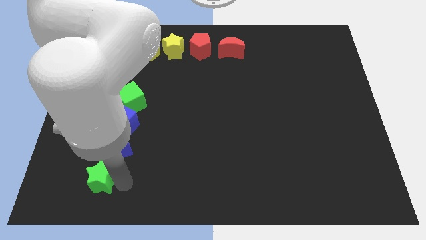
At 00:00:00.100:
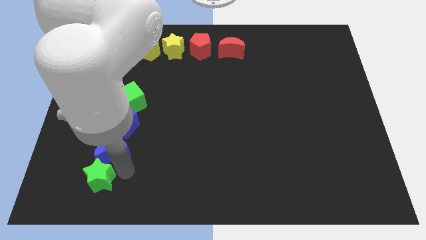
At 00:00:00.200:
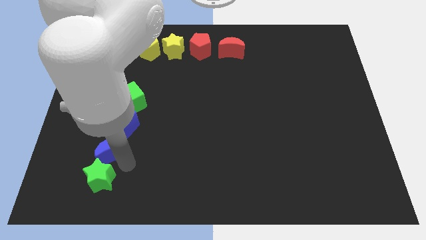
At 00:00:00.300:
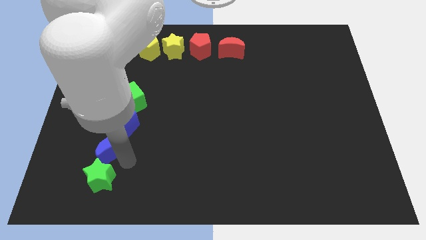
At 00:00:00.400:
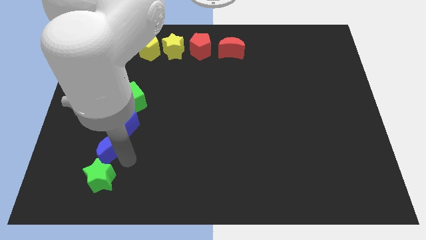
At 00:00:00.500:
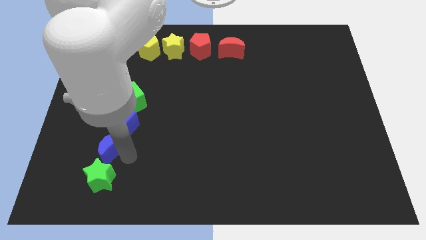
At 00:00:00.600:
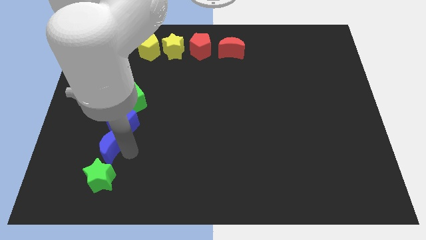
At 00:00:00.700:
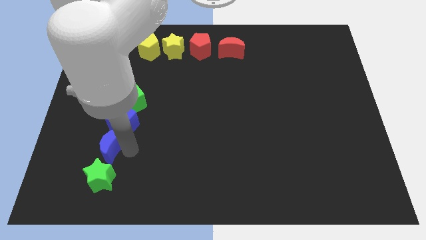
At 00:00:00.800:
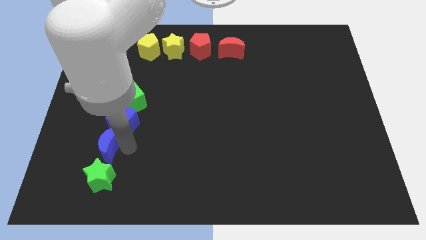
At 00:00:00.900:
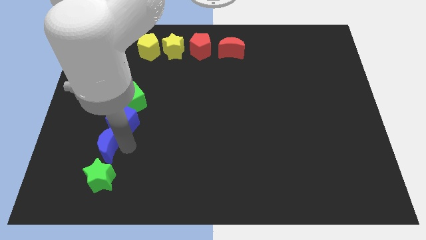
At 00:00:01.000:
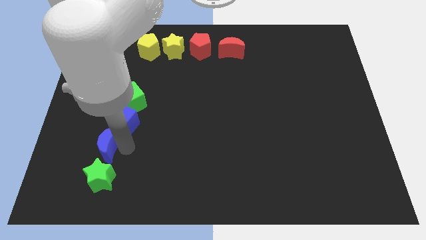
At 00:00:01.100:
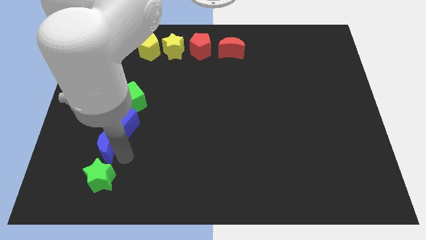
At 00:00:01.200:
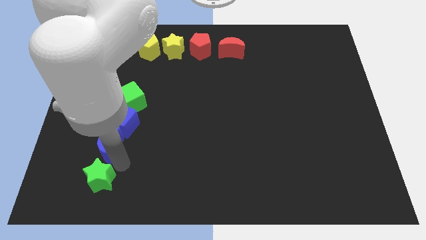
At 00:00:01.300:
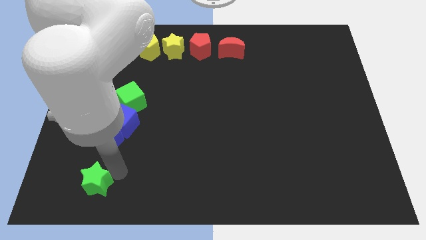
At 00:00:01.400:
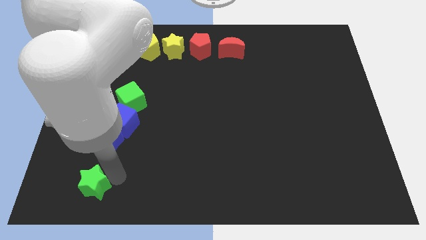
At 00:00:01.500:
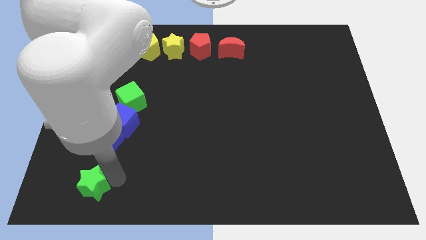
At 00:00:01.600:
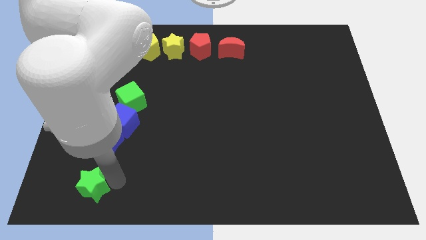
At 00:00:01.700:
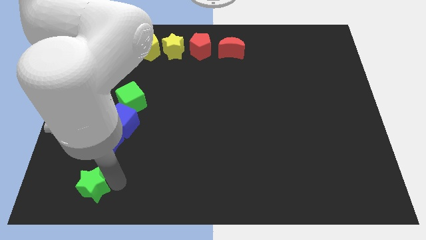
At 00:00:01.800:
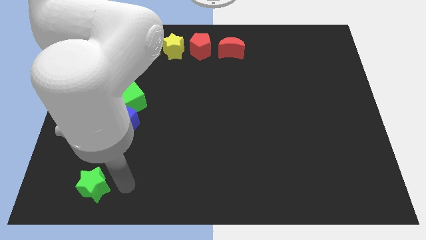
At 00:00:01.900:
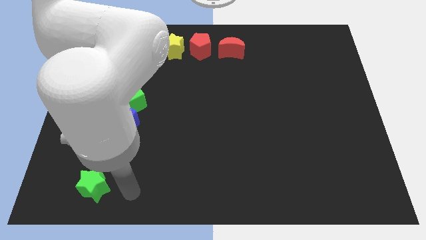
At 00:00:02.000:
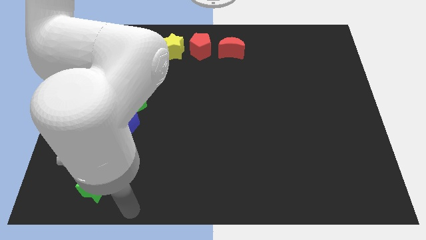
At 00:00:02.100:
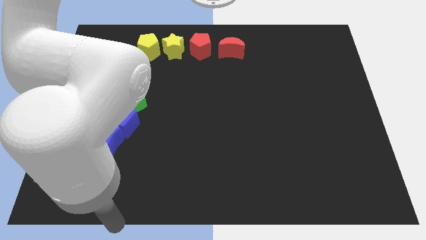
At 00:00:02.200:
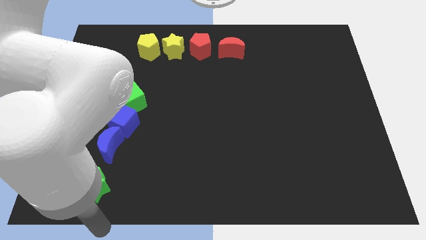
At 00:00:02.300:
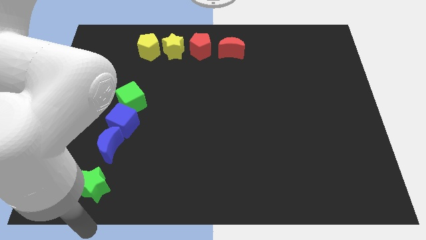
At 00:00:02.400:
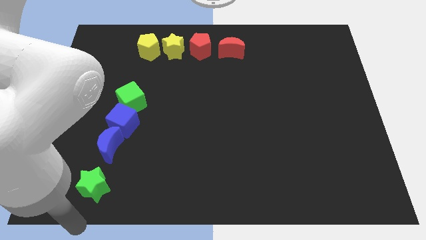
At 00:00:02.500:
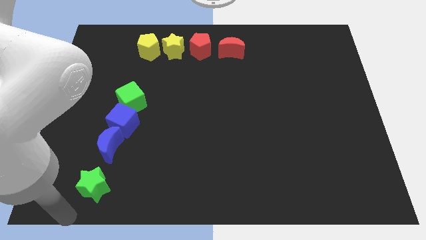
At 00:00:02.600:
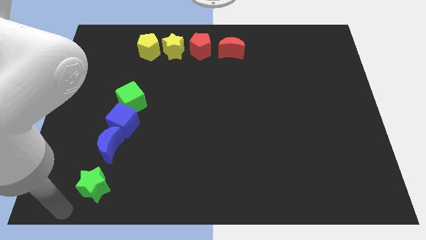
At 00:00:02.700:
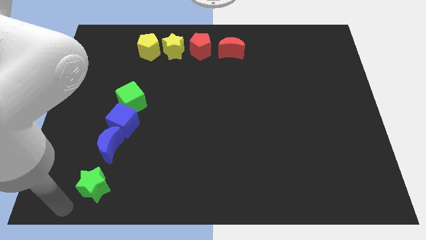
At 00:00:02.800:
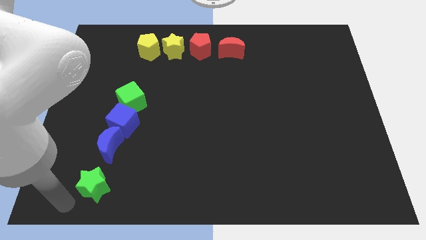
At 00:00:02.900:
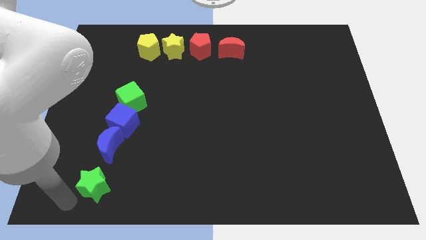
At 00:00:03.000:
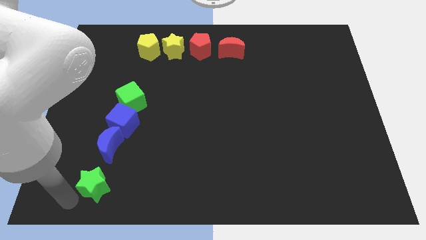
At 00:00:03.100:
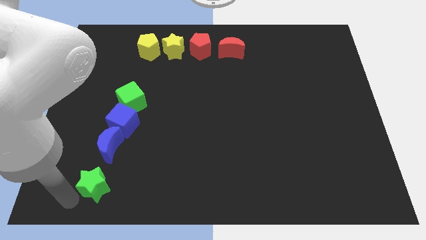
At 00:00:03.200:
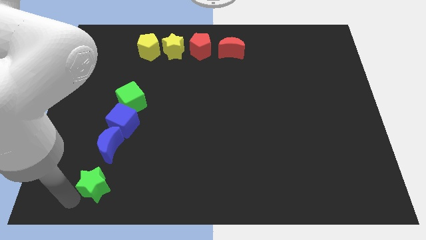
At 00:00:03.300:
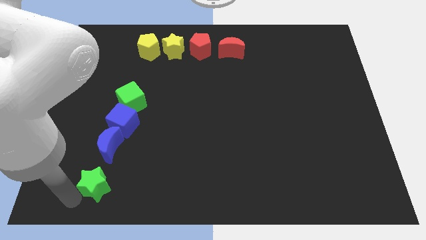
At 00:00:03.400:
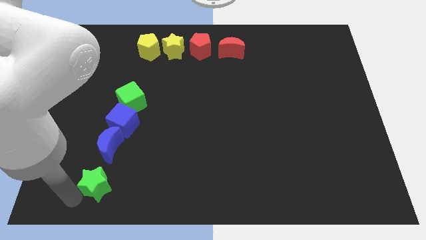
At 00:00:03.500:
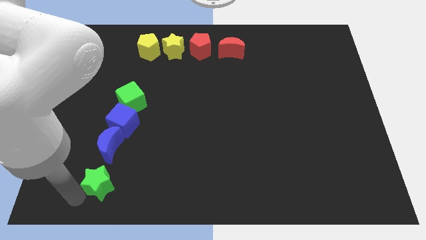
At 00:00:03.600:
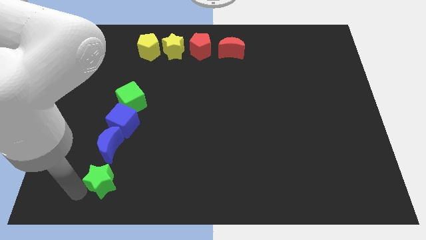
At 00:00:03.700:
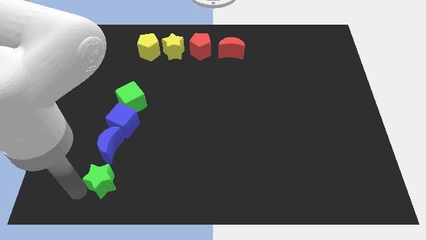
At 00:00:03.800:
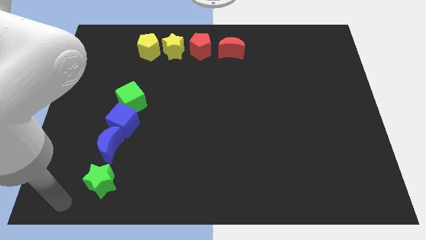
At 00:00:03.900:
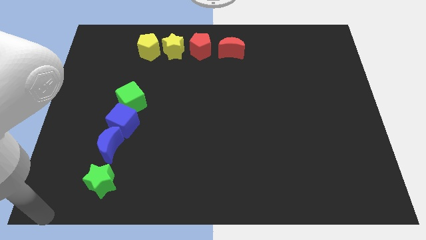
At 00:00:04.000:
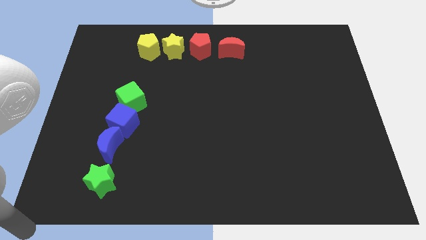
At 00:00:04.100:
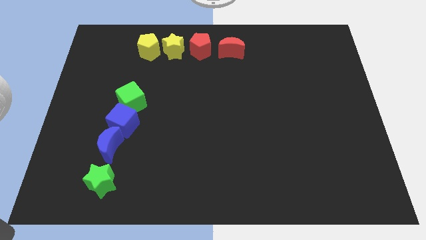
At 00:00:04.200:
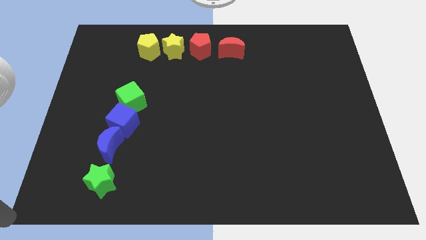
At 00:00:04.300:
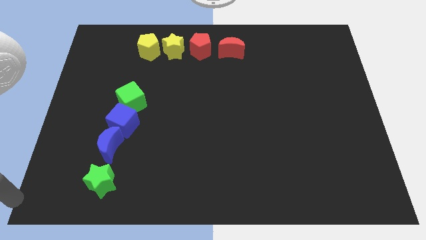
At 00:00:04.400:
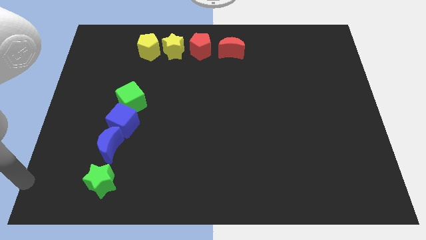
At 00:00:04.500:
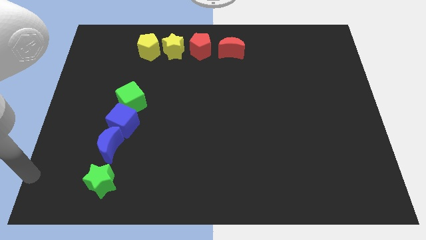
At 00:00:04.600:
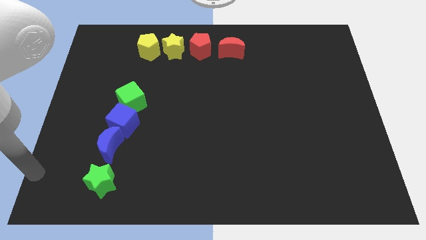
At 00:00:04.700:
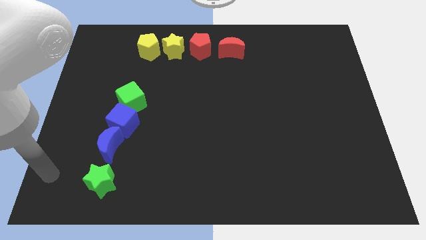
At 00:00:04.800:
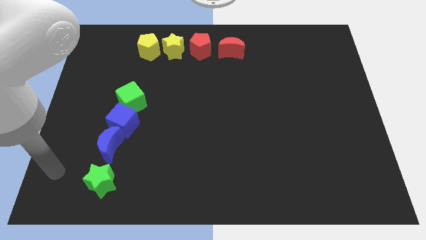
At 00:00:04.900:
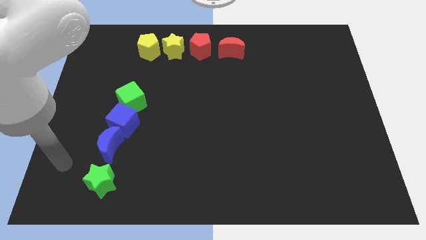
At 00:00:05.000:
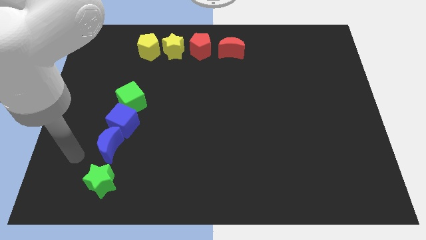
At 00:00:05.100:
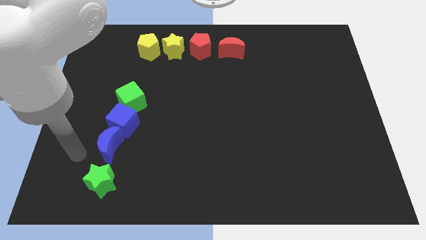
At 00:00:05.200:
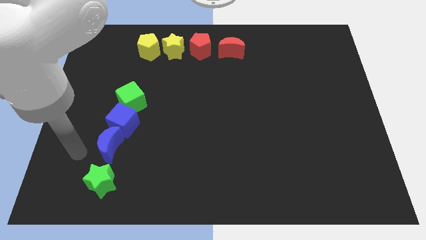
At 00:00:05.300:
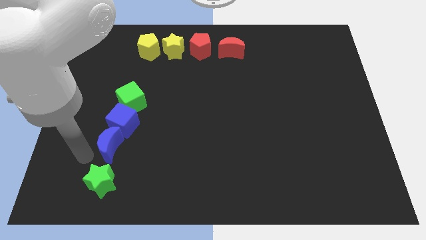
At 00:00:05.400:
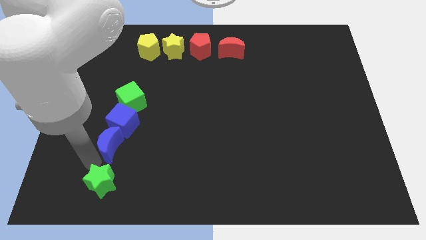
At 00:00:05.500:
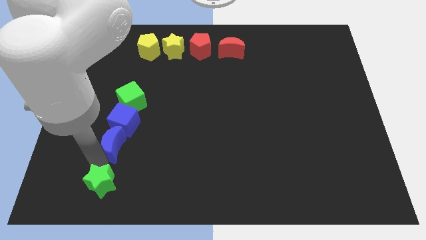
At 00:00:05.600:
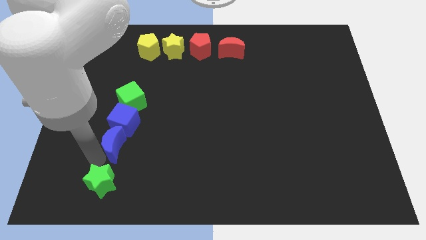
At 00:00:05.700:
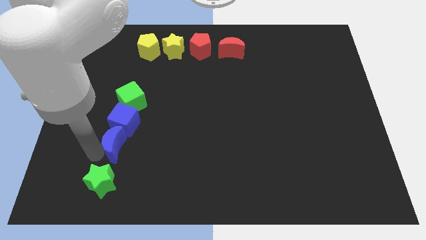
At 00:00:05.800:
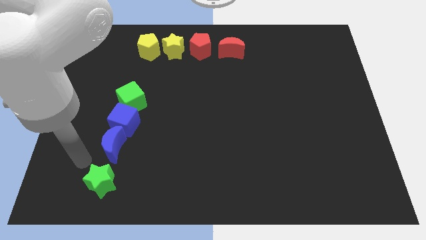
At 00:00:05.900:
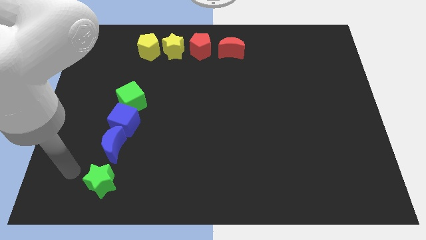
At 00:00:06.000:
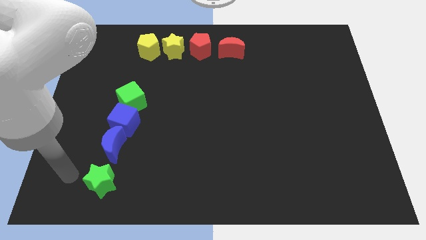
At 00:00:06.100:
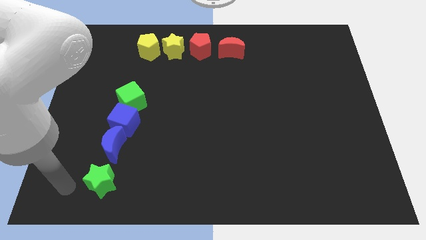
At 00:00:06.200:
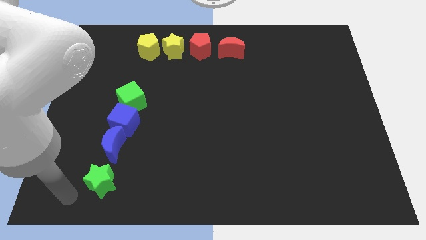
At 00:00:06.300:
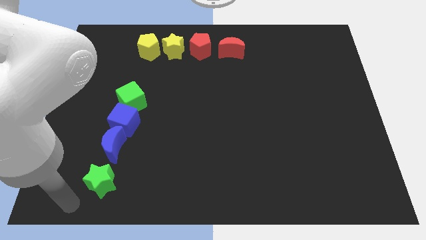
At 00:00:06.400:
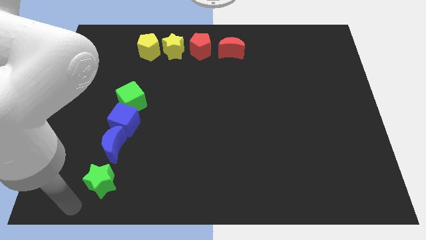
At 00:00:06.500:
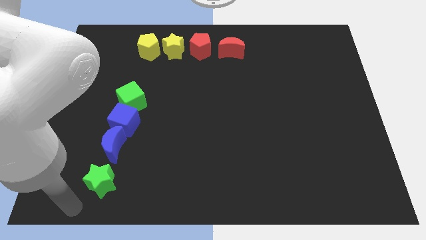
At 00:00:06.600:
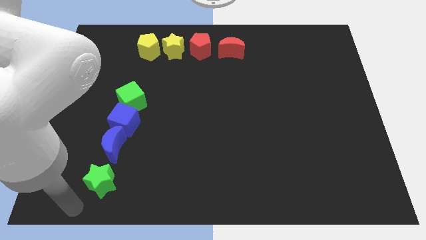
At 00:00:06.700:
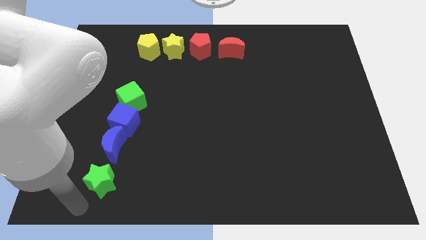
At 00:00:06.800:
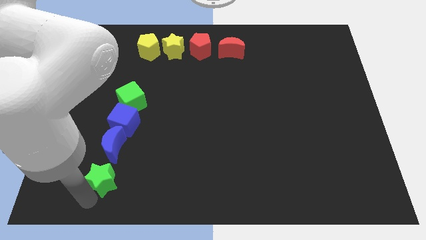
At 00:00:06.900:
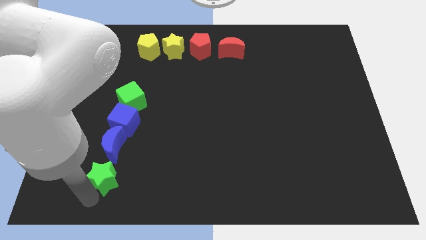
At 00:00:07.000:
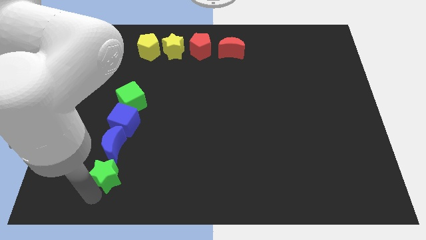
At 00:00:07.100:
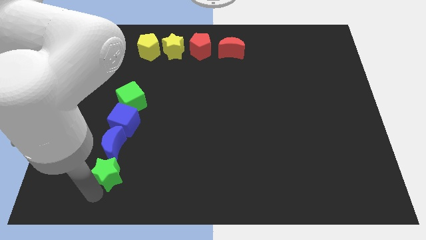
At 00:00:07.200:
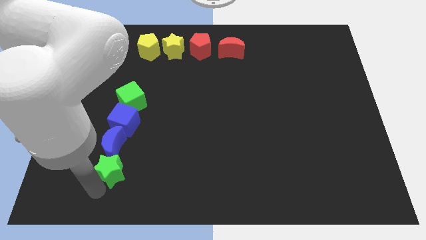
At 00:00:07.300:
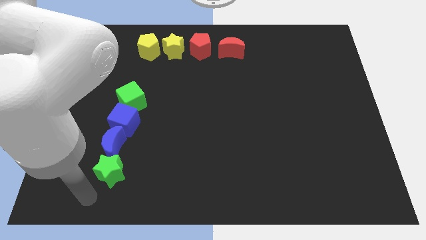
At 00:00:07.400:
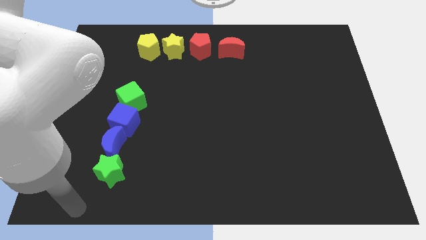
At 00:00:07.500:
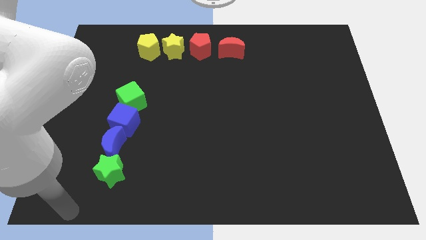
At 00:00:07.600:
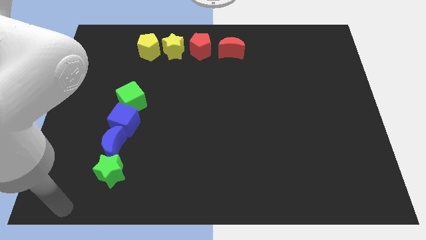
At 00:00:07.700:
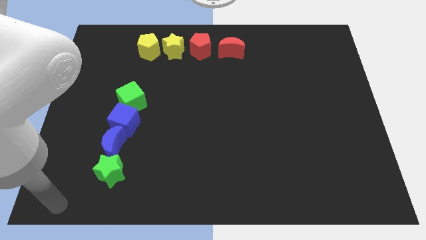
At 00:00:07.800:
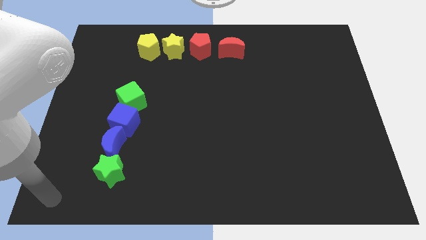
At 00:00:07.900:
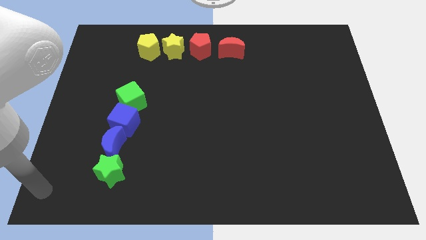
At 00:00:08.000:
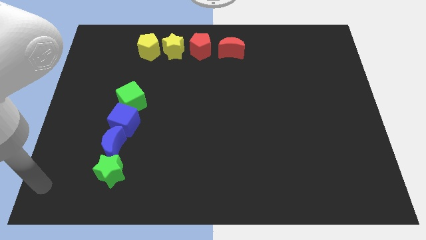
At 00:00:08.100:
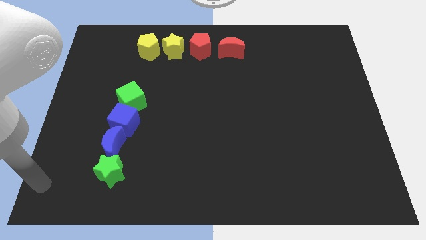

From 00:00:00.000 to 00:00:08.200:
line up the green and blue blocks vertically

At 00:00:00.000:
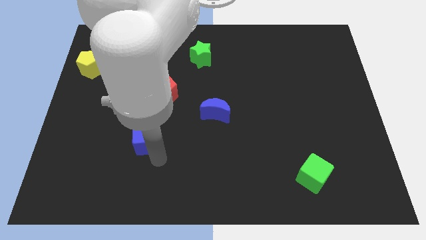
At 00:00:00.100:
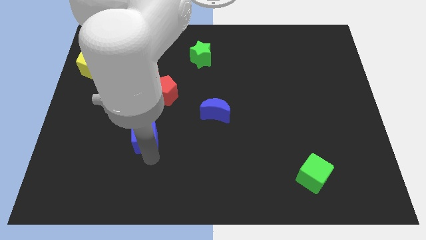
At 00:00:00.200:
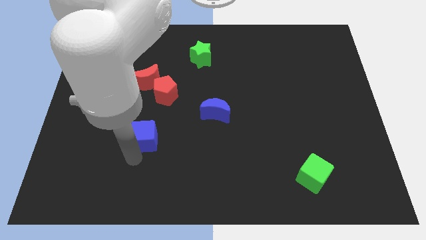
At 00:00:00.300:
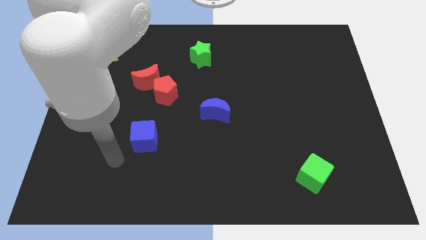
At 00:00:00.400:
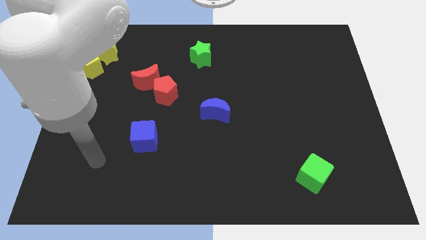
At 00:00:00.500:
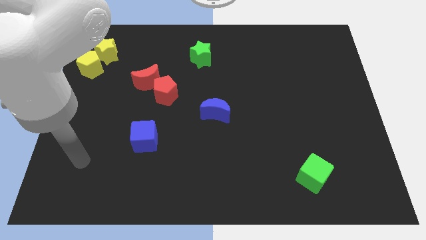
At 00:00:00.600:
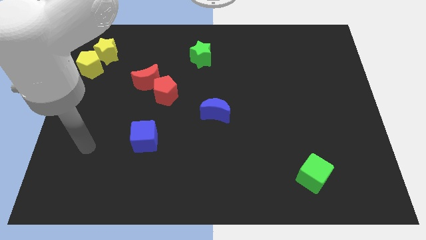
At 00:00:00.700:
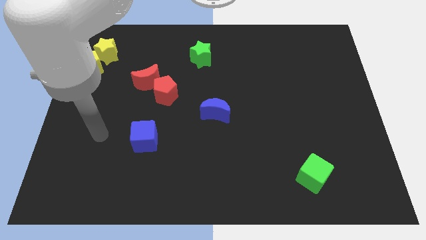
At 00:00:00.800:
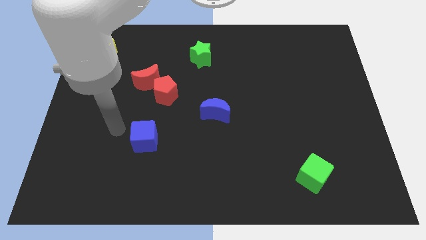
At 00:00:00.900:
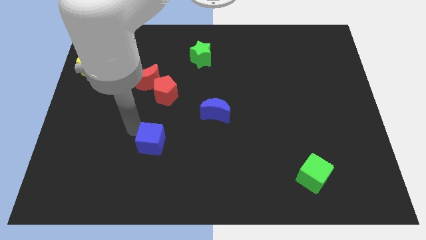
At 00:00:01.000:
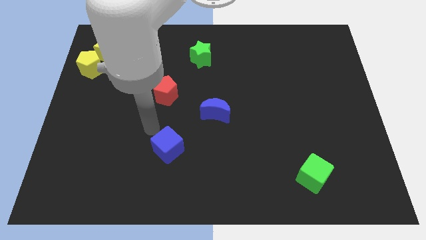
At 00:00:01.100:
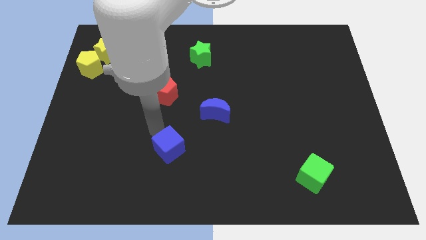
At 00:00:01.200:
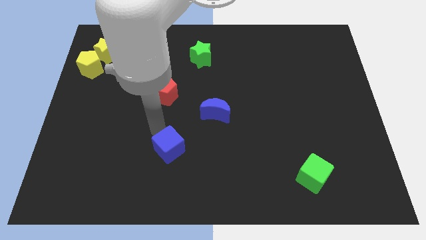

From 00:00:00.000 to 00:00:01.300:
move the blue cube vertically below the red pentagon
